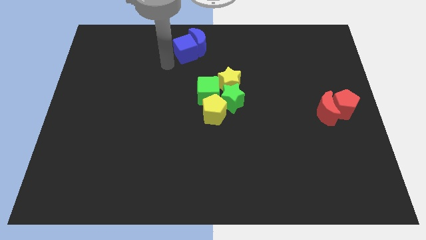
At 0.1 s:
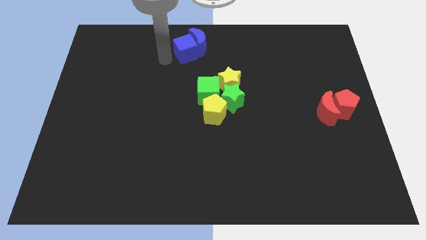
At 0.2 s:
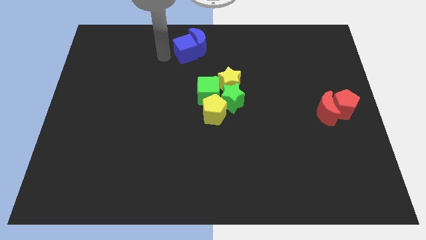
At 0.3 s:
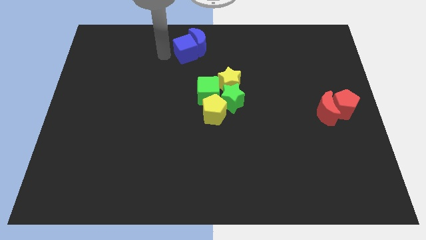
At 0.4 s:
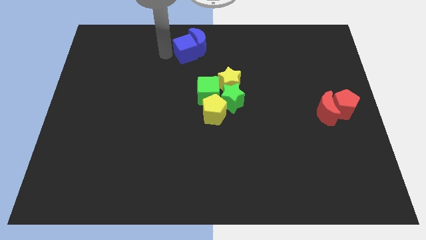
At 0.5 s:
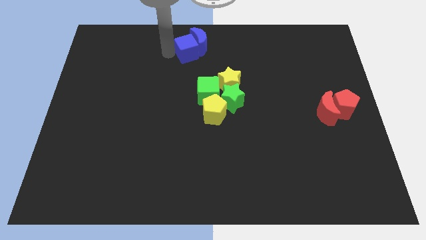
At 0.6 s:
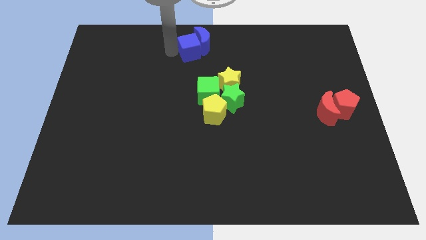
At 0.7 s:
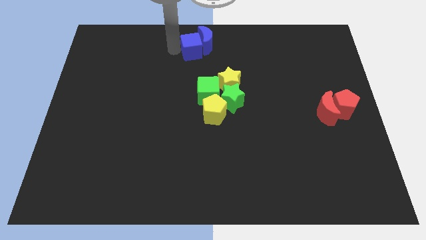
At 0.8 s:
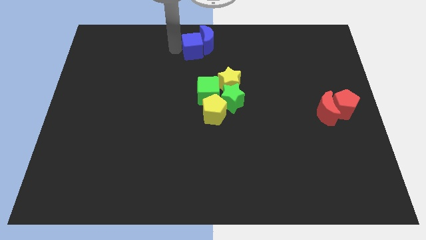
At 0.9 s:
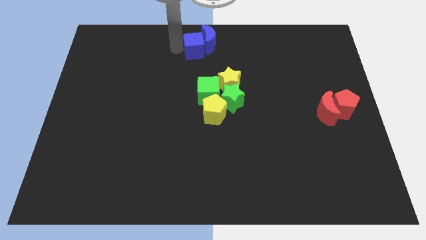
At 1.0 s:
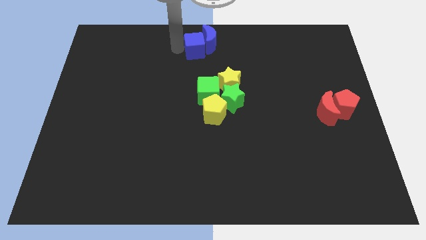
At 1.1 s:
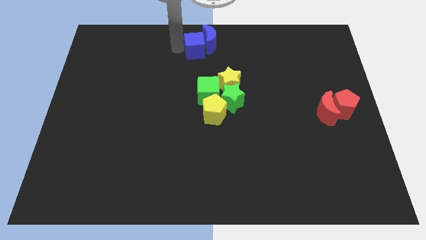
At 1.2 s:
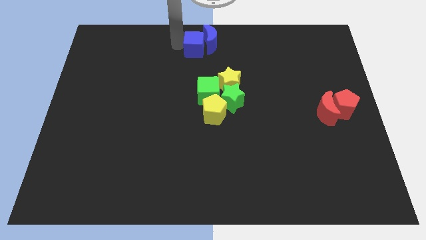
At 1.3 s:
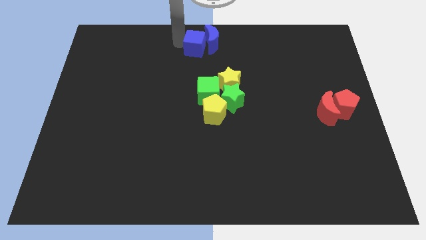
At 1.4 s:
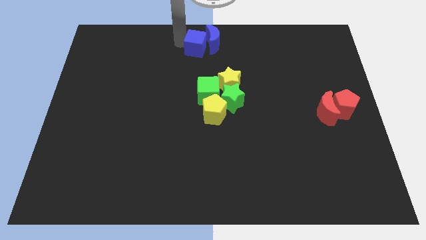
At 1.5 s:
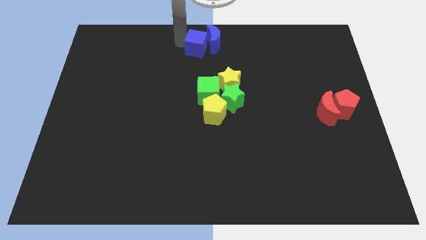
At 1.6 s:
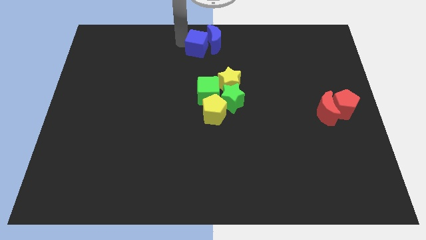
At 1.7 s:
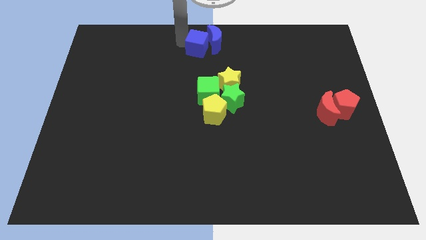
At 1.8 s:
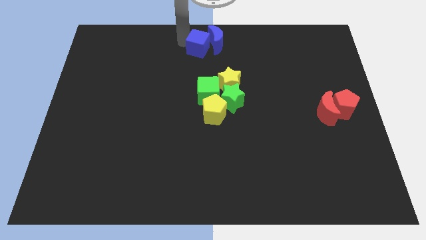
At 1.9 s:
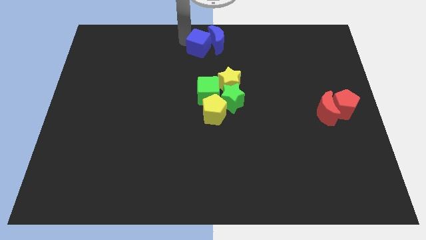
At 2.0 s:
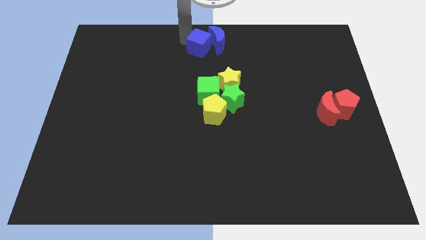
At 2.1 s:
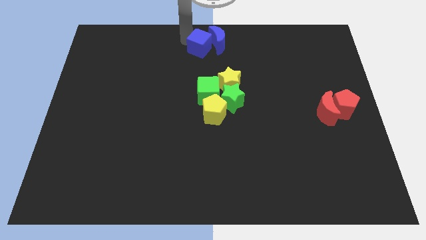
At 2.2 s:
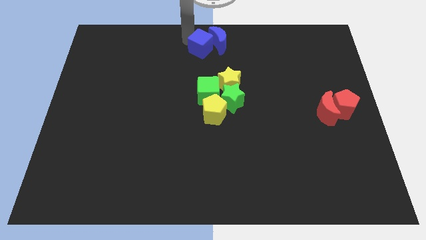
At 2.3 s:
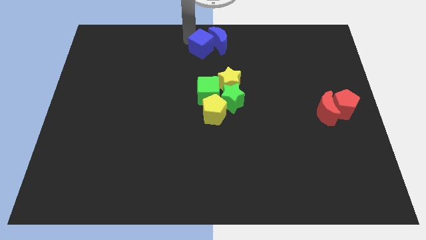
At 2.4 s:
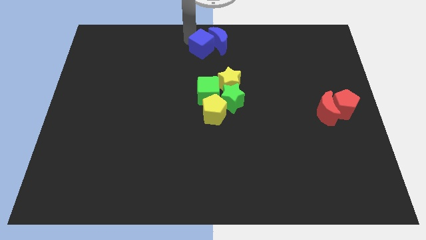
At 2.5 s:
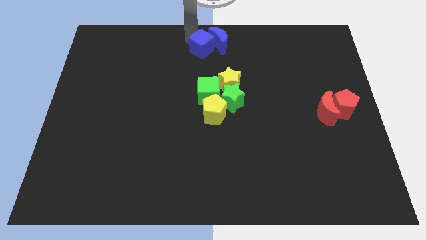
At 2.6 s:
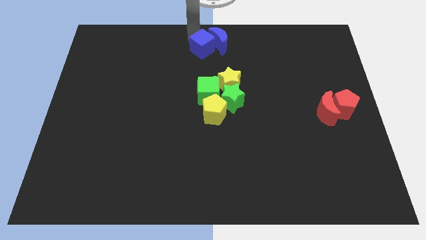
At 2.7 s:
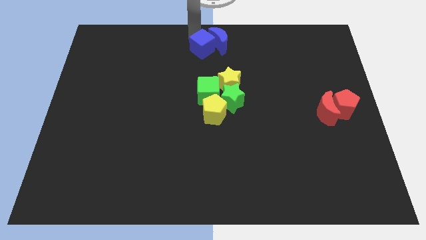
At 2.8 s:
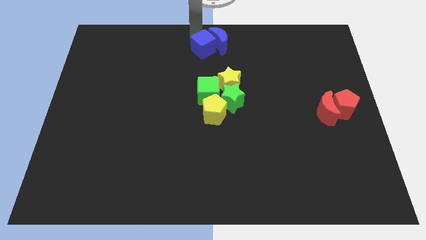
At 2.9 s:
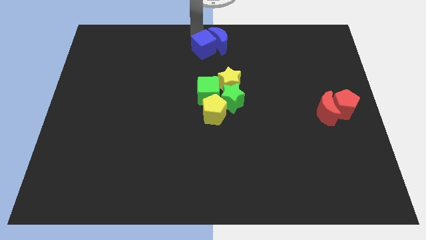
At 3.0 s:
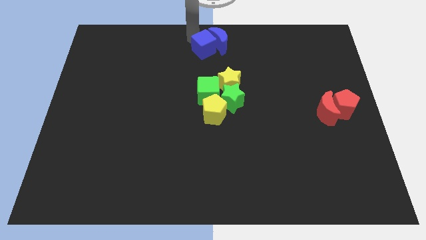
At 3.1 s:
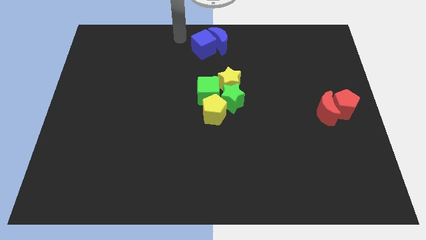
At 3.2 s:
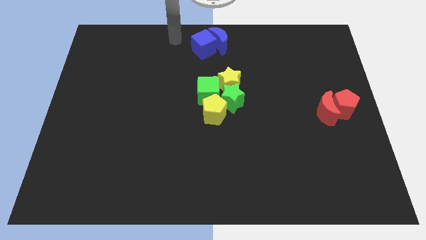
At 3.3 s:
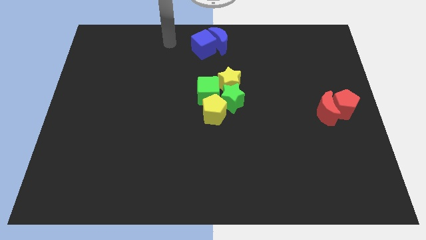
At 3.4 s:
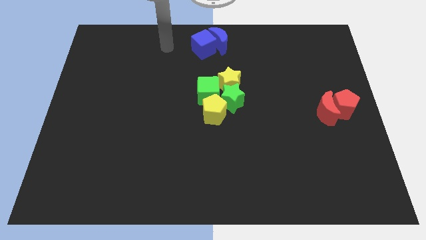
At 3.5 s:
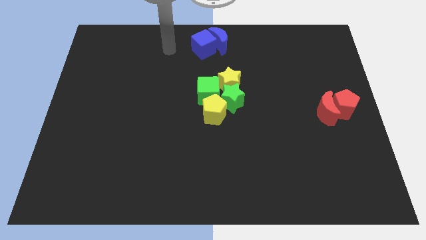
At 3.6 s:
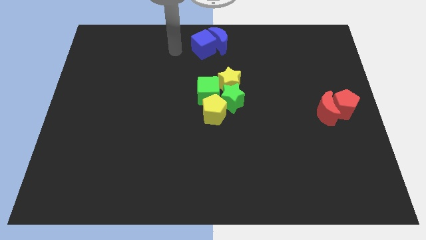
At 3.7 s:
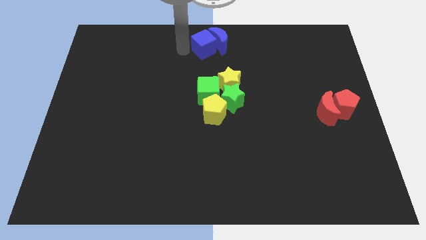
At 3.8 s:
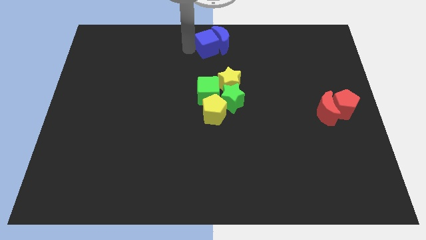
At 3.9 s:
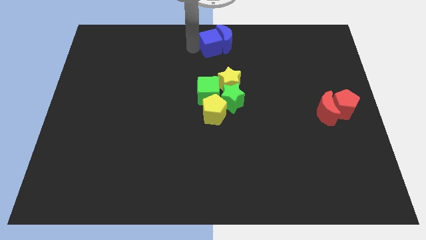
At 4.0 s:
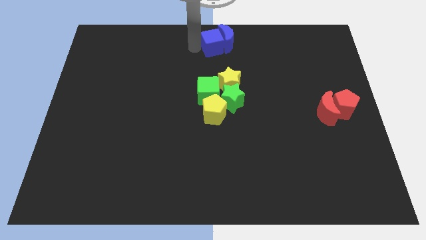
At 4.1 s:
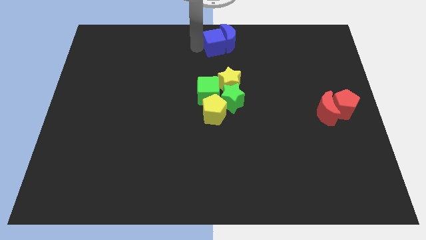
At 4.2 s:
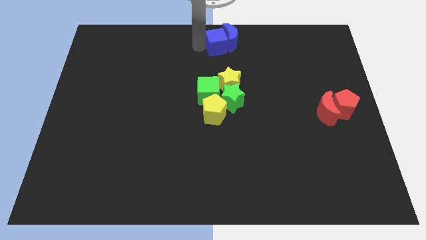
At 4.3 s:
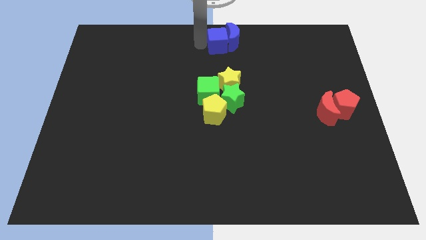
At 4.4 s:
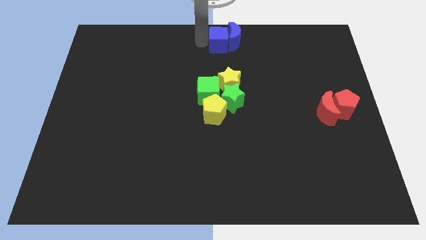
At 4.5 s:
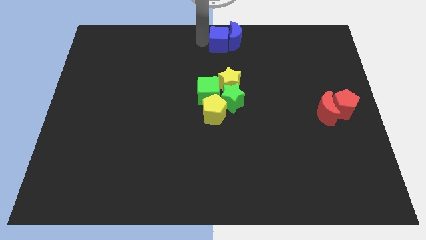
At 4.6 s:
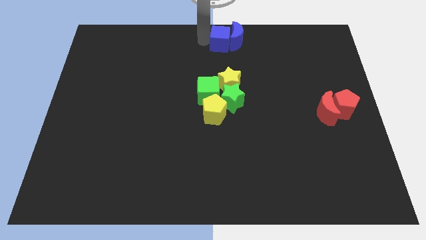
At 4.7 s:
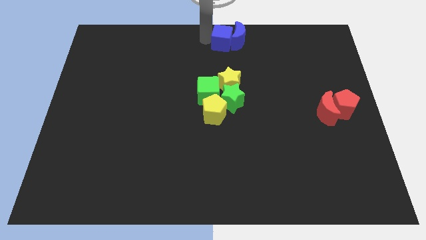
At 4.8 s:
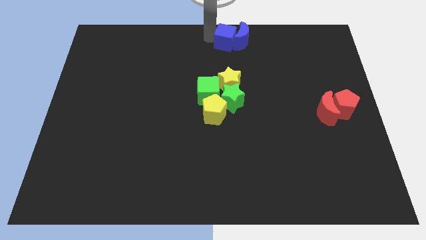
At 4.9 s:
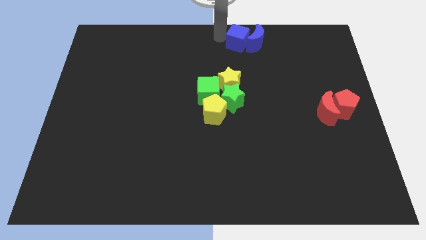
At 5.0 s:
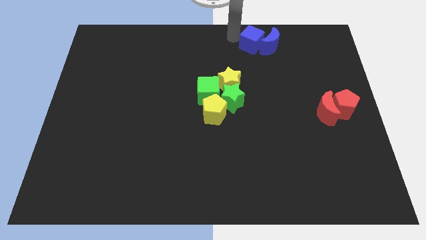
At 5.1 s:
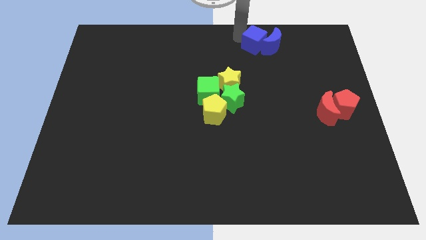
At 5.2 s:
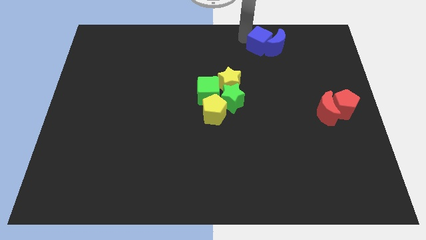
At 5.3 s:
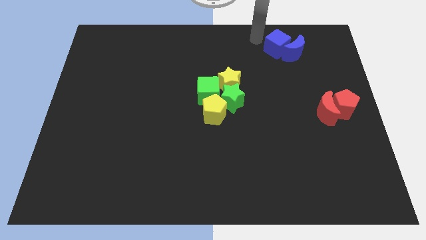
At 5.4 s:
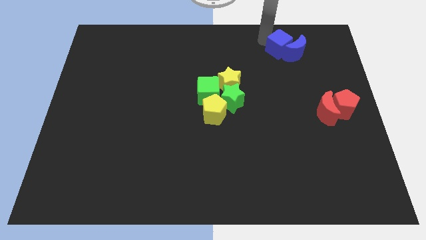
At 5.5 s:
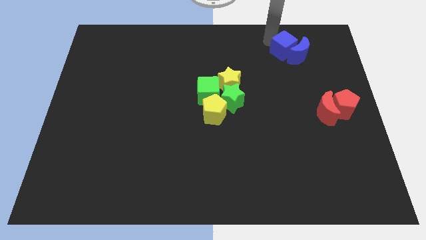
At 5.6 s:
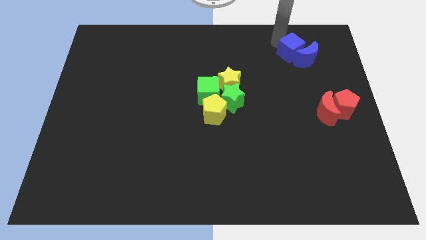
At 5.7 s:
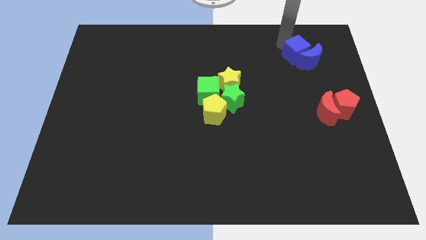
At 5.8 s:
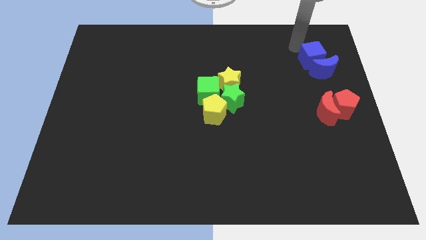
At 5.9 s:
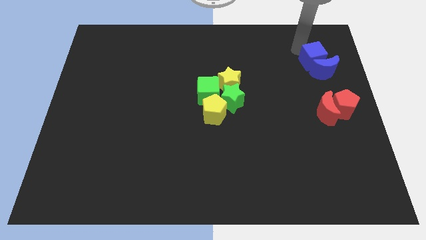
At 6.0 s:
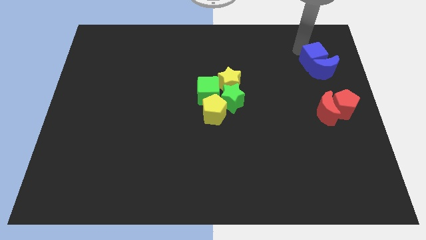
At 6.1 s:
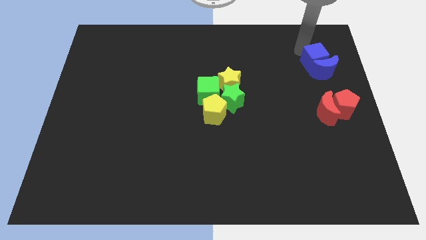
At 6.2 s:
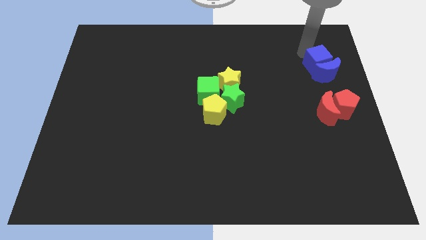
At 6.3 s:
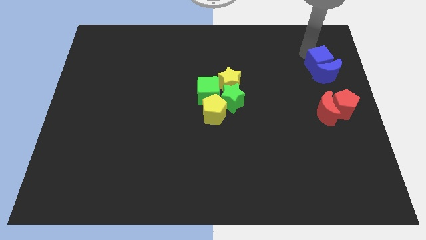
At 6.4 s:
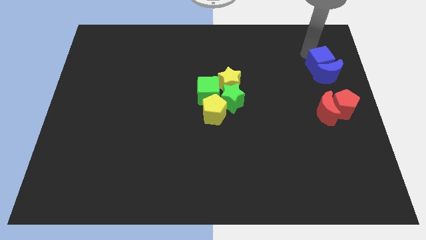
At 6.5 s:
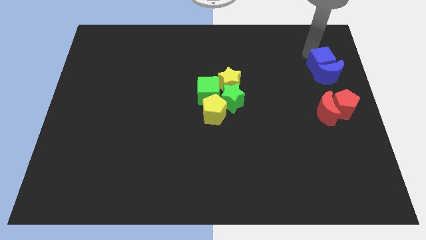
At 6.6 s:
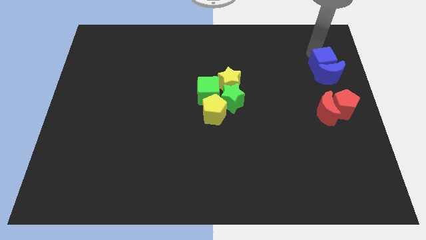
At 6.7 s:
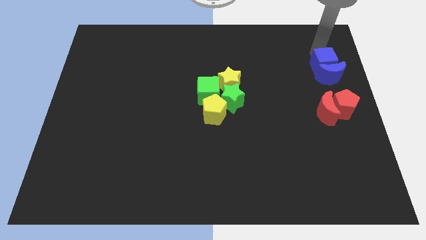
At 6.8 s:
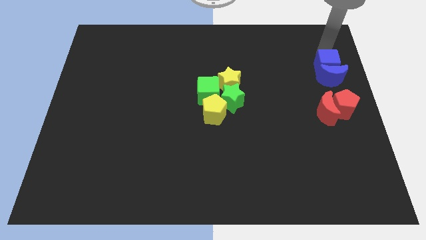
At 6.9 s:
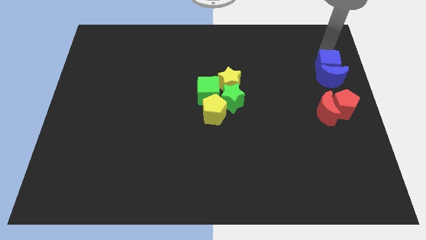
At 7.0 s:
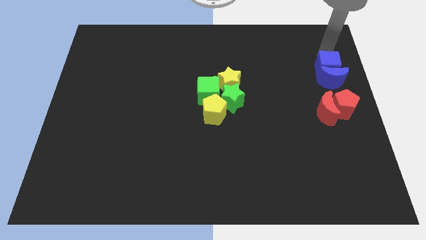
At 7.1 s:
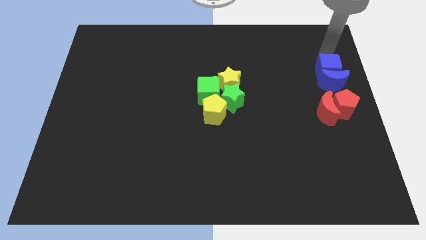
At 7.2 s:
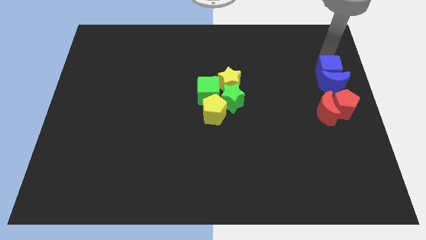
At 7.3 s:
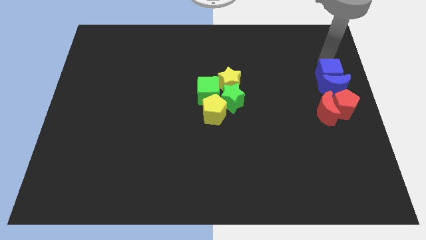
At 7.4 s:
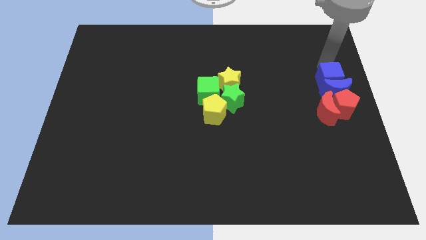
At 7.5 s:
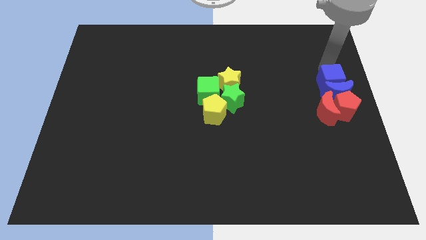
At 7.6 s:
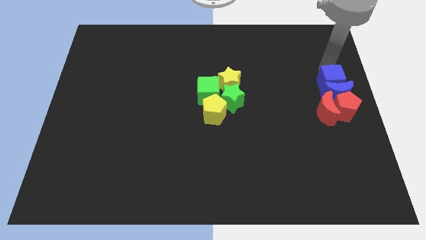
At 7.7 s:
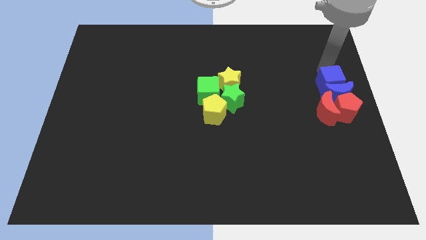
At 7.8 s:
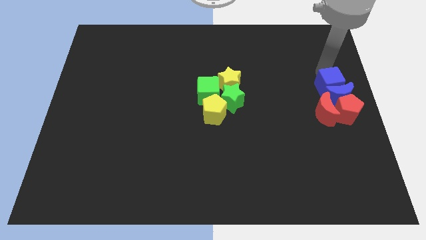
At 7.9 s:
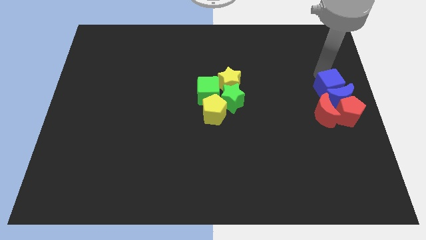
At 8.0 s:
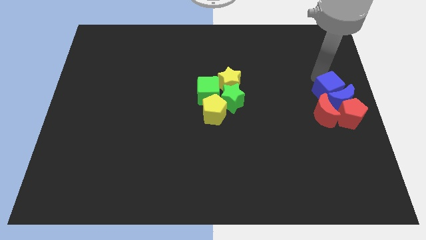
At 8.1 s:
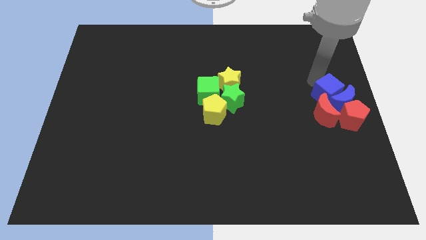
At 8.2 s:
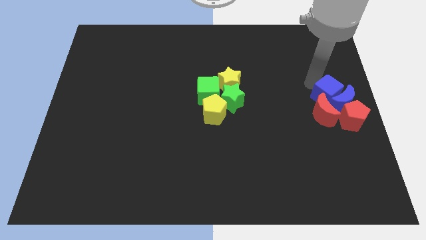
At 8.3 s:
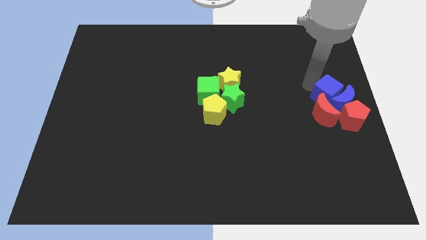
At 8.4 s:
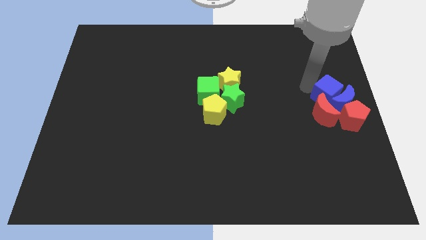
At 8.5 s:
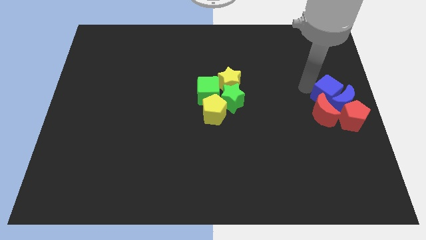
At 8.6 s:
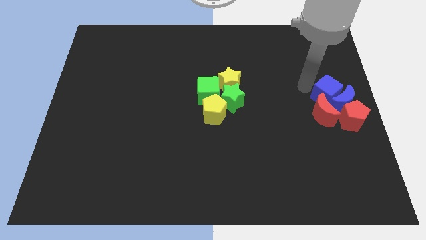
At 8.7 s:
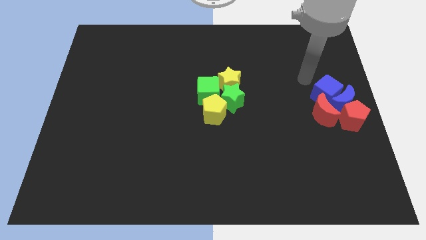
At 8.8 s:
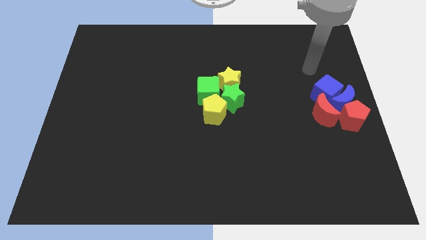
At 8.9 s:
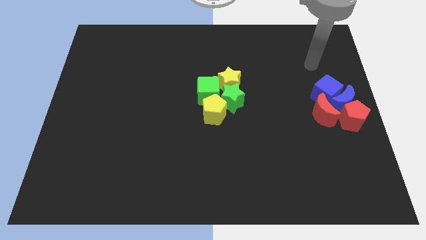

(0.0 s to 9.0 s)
move the blue group of blue blocks into the group of red blocks
